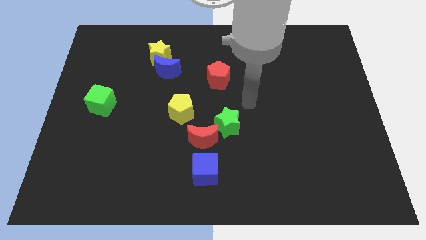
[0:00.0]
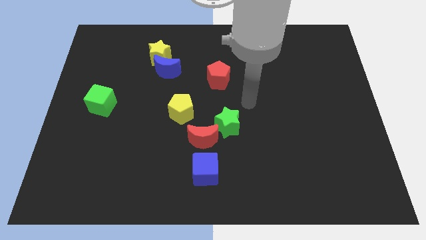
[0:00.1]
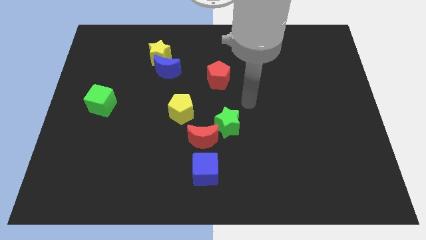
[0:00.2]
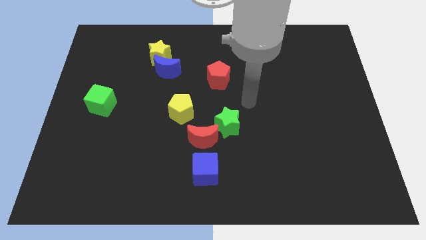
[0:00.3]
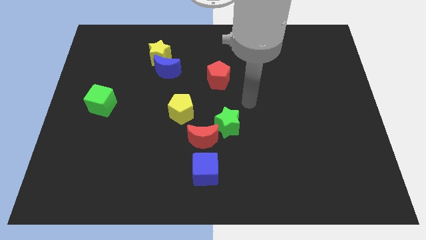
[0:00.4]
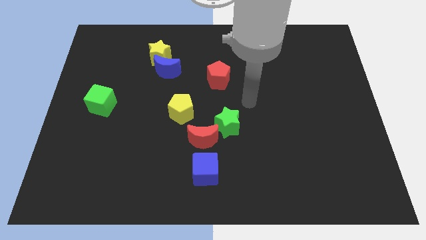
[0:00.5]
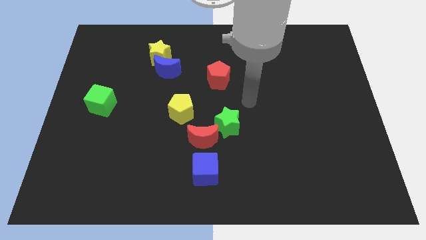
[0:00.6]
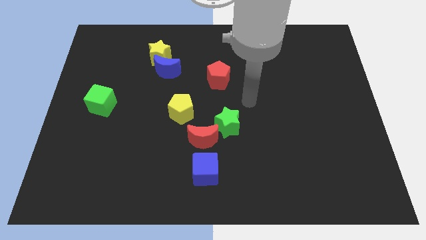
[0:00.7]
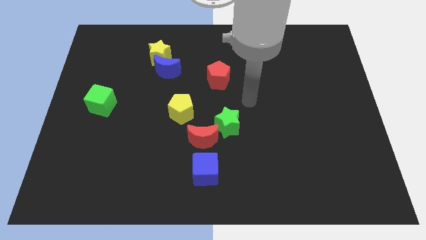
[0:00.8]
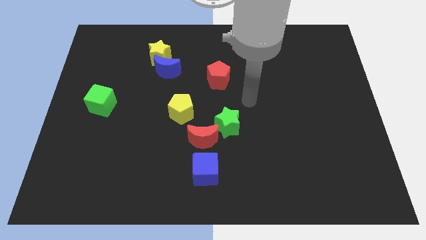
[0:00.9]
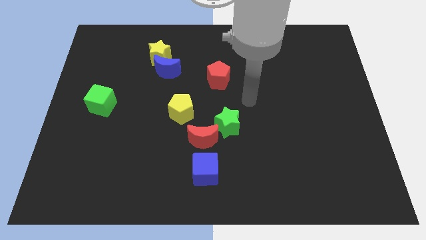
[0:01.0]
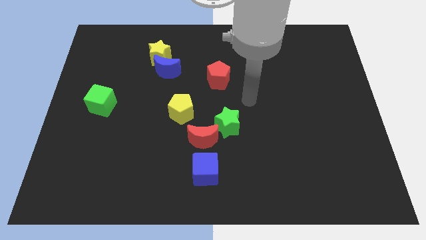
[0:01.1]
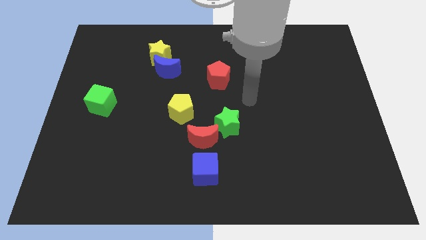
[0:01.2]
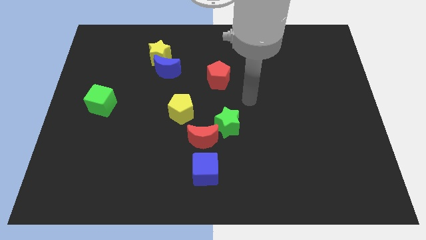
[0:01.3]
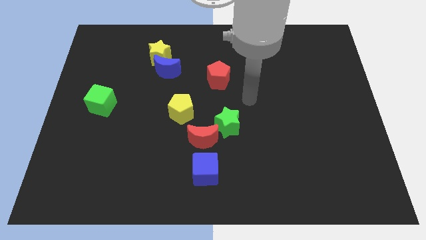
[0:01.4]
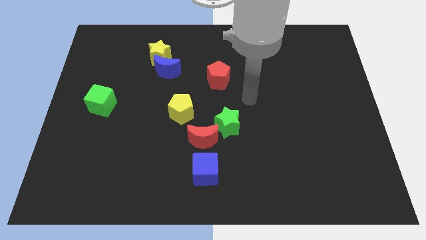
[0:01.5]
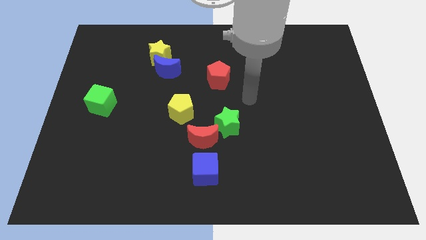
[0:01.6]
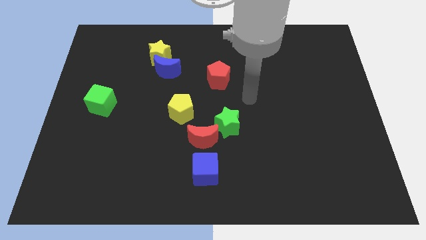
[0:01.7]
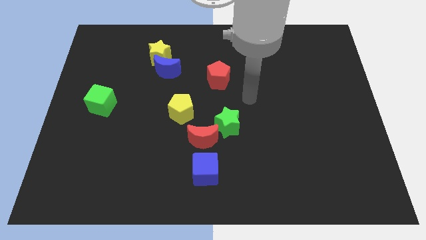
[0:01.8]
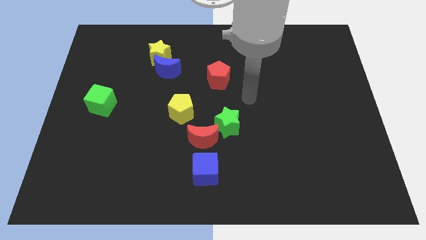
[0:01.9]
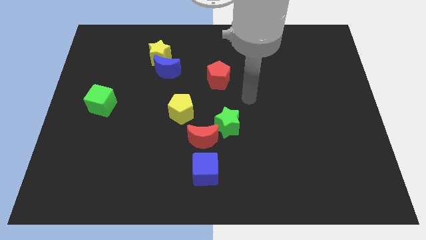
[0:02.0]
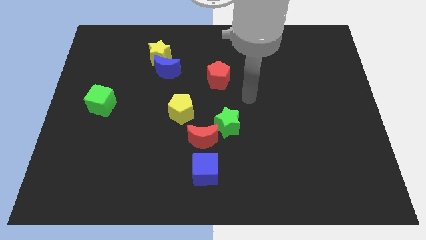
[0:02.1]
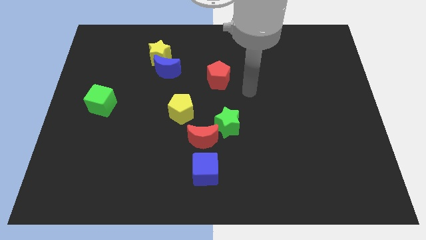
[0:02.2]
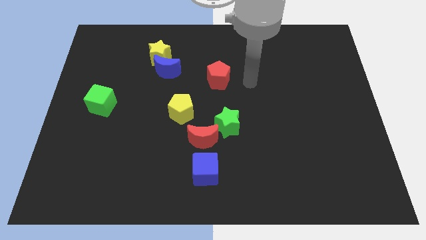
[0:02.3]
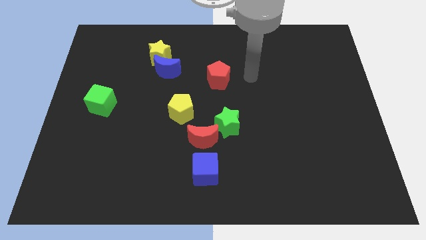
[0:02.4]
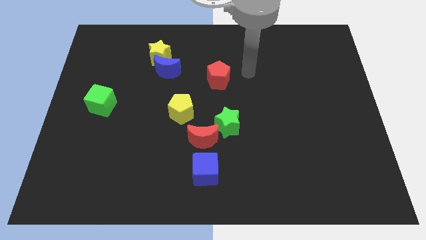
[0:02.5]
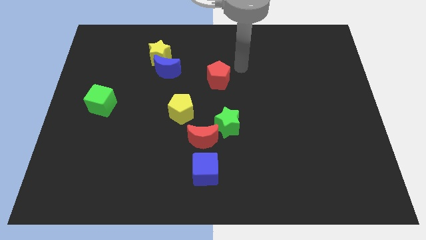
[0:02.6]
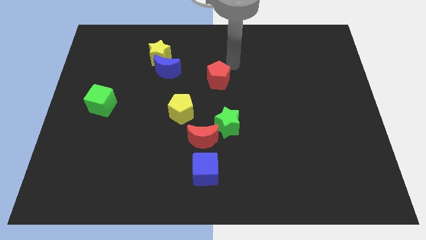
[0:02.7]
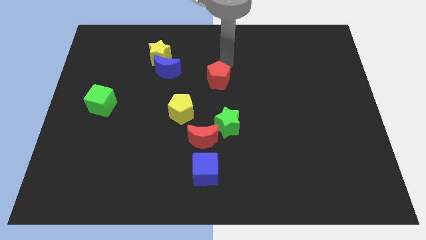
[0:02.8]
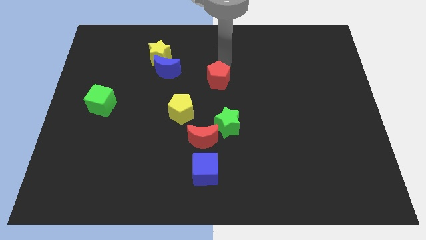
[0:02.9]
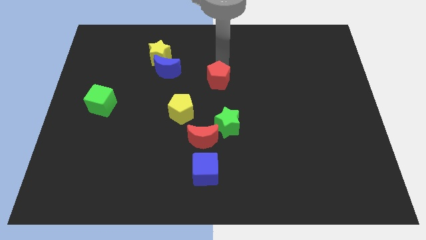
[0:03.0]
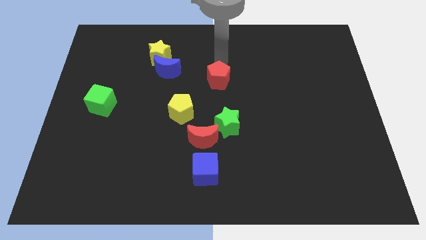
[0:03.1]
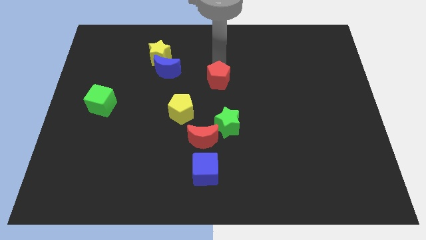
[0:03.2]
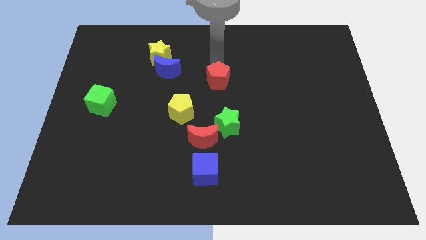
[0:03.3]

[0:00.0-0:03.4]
move the arm towards the red pentagon

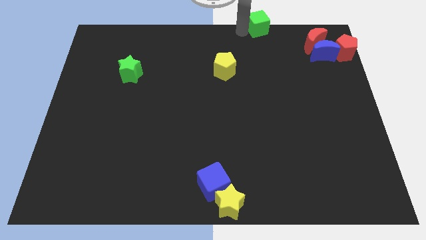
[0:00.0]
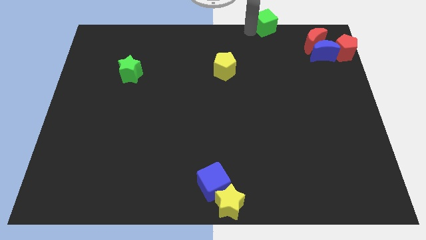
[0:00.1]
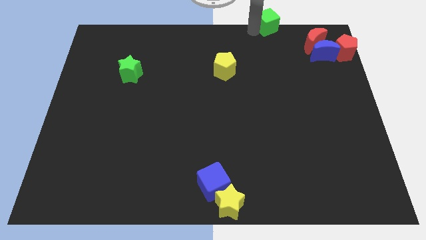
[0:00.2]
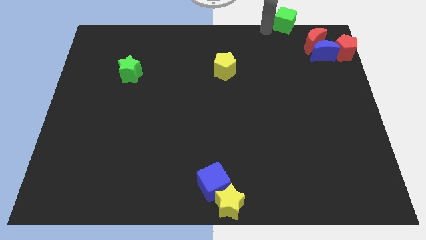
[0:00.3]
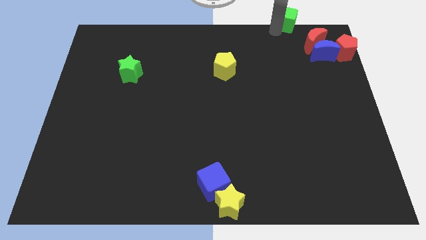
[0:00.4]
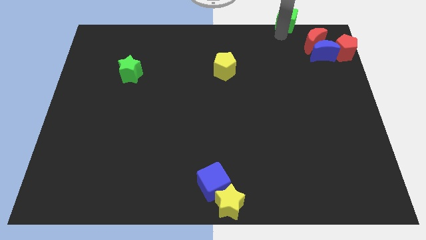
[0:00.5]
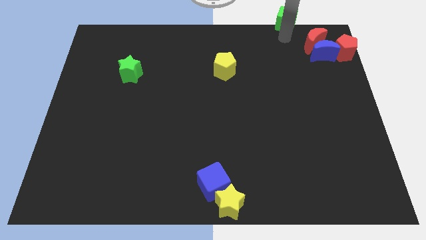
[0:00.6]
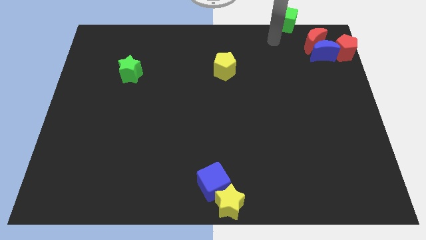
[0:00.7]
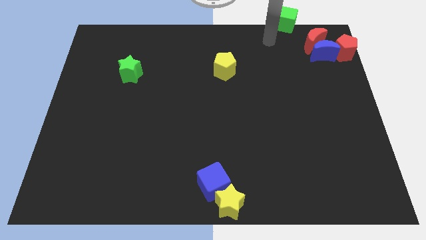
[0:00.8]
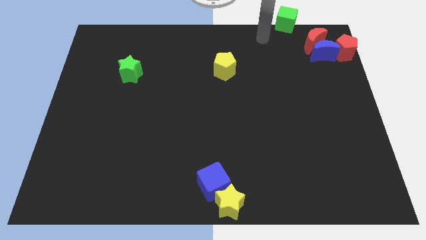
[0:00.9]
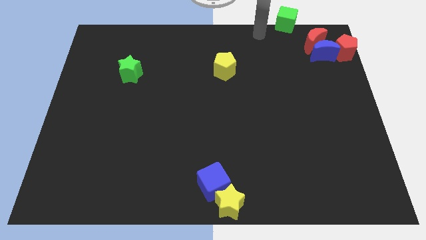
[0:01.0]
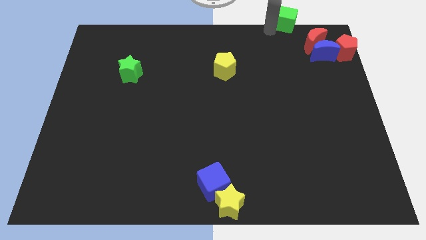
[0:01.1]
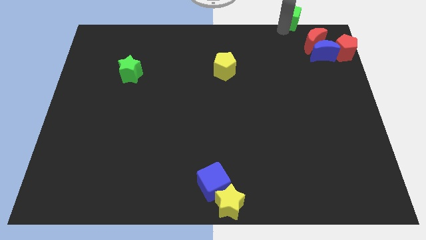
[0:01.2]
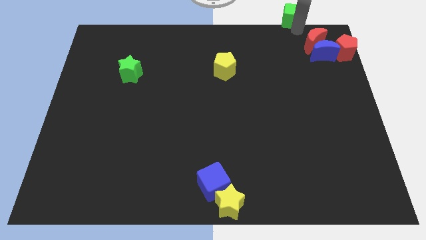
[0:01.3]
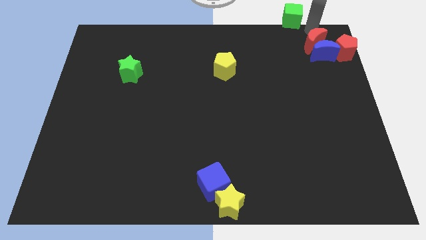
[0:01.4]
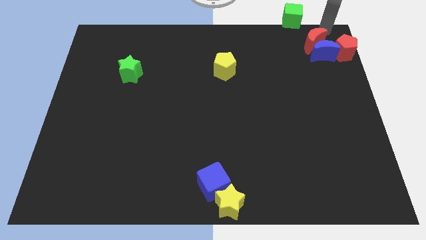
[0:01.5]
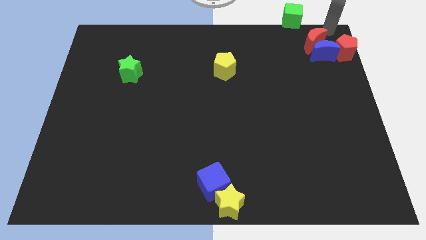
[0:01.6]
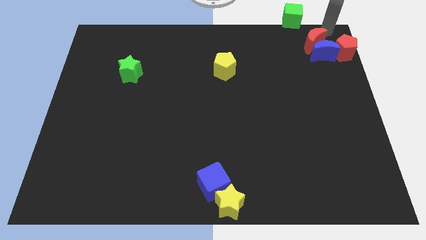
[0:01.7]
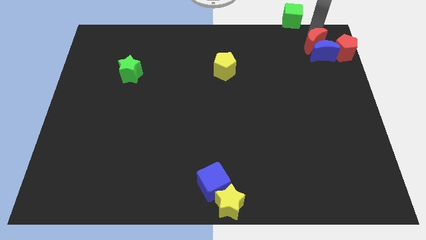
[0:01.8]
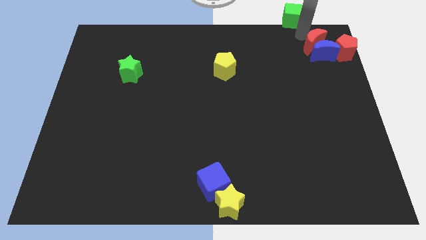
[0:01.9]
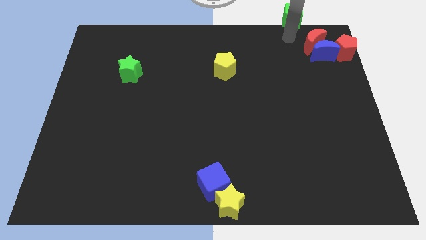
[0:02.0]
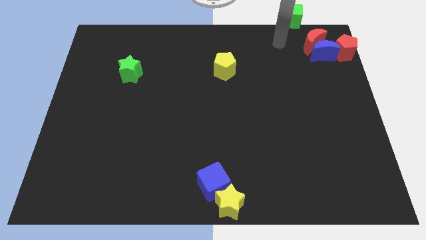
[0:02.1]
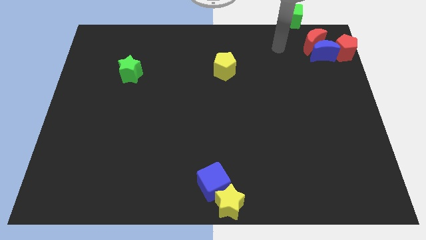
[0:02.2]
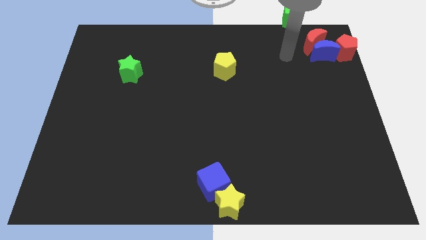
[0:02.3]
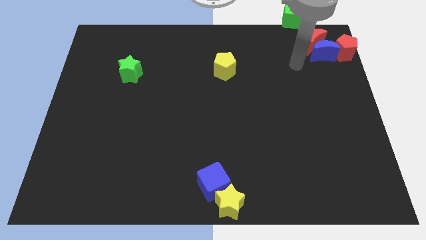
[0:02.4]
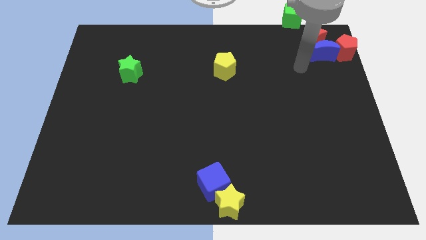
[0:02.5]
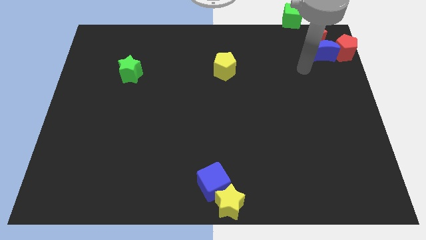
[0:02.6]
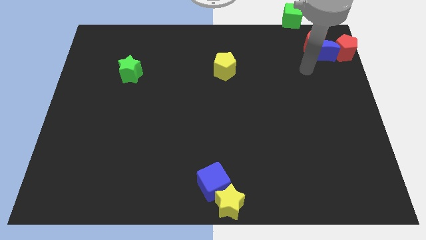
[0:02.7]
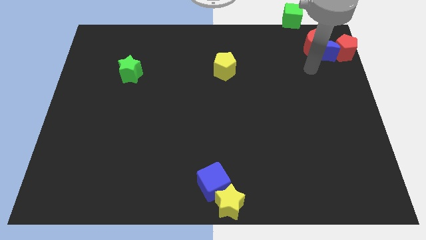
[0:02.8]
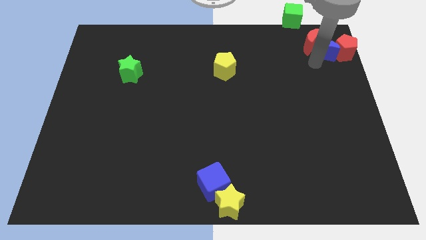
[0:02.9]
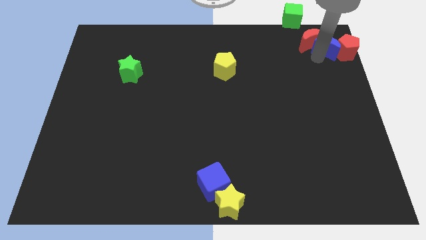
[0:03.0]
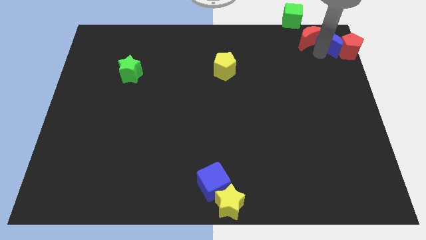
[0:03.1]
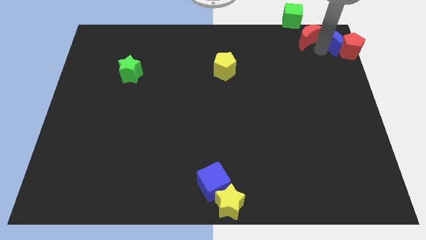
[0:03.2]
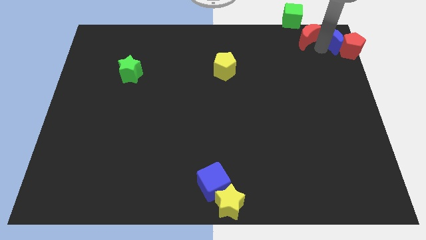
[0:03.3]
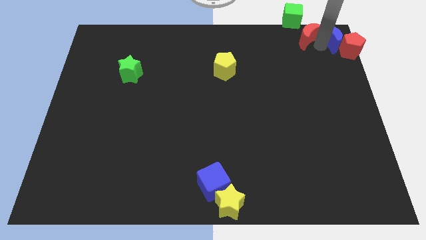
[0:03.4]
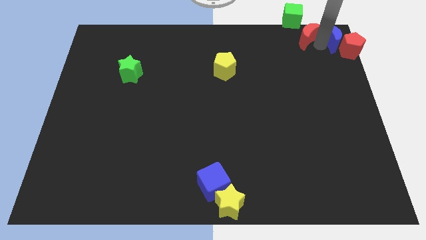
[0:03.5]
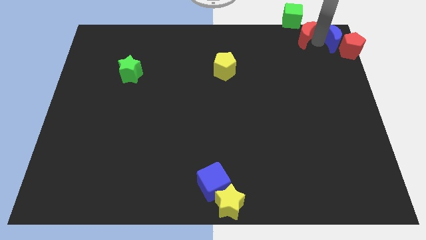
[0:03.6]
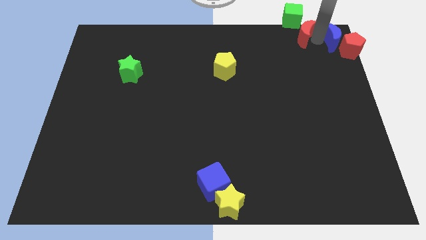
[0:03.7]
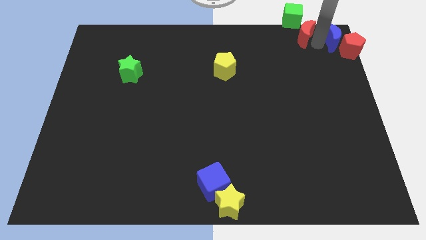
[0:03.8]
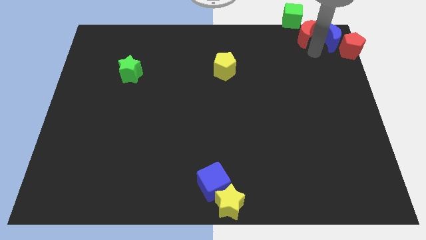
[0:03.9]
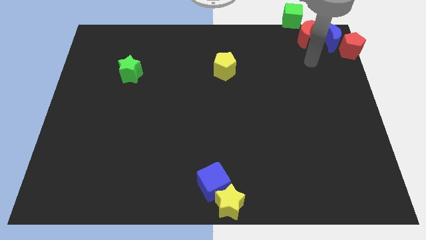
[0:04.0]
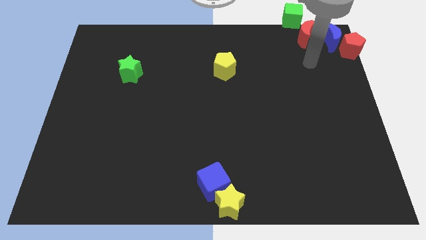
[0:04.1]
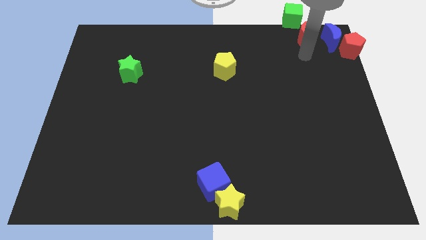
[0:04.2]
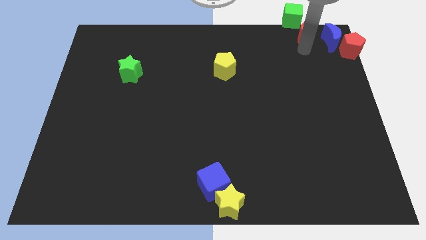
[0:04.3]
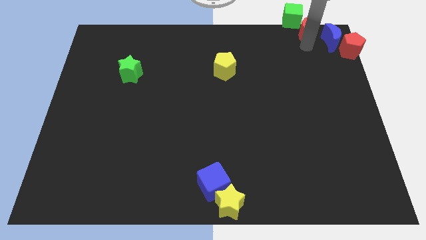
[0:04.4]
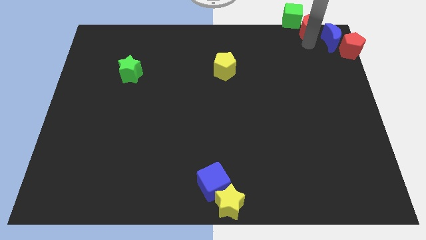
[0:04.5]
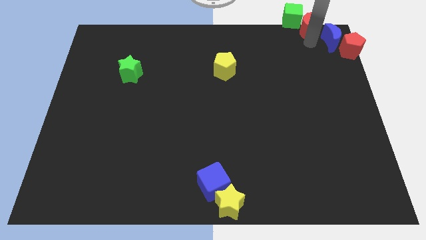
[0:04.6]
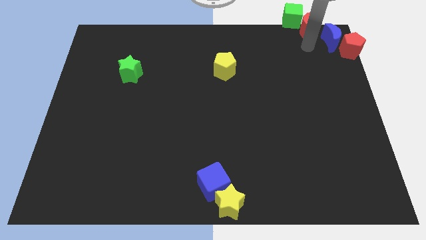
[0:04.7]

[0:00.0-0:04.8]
make a diagonal line out of the red blocksgreen cube and the blue moon

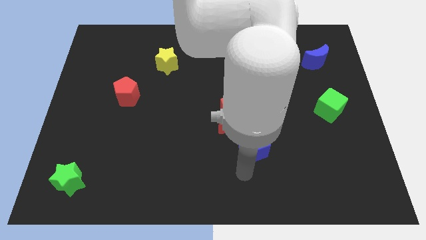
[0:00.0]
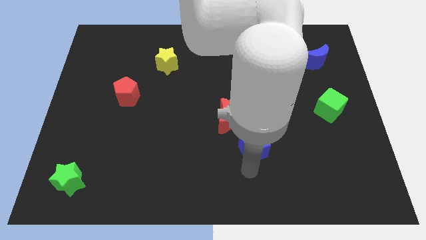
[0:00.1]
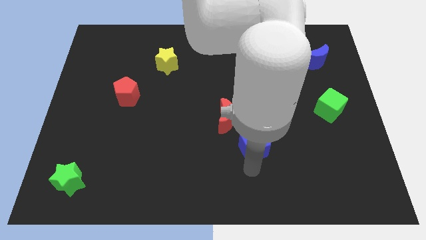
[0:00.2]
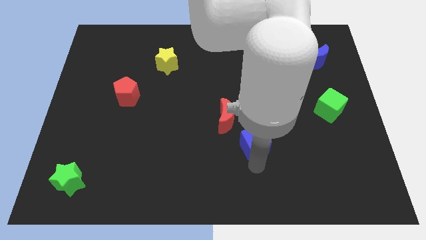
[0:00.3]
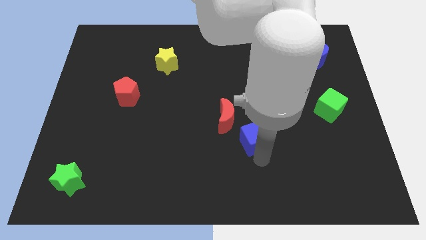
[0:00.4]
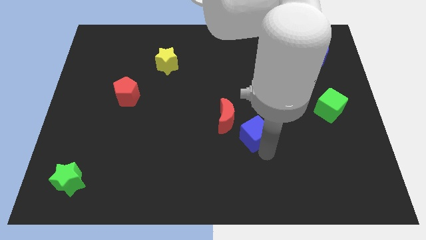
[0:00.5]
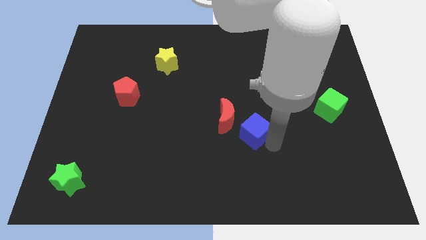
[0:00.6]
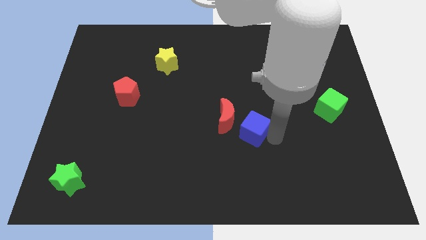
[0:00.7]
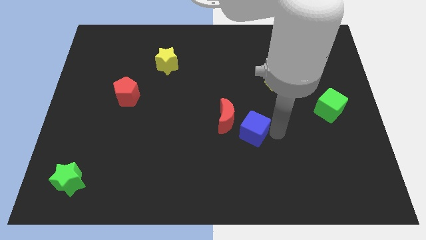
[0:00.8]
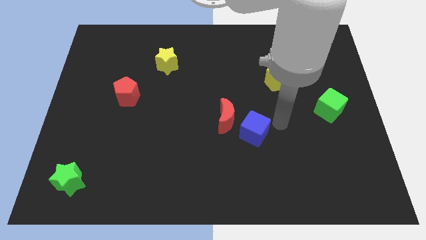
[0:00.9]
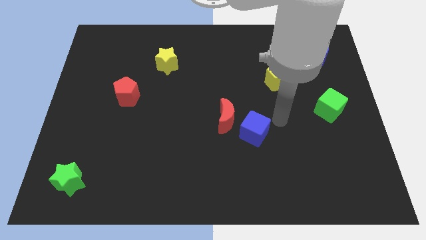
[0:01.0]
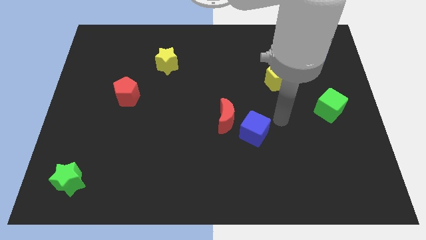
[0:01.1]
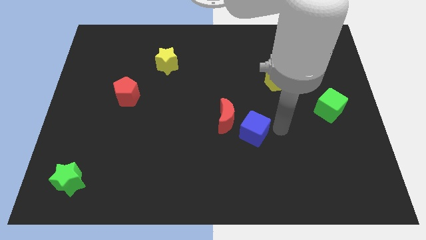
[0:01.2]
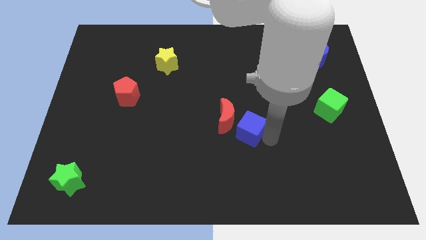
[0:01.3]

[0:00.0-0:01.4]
move blue cube towards the red moon
